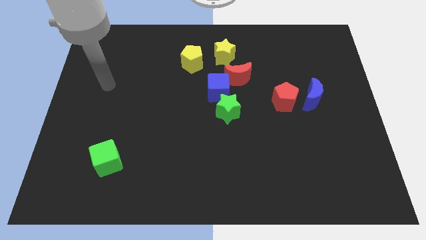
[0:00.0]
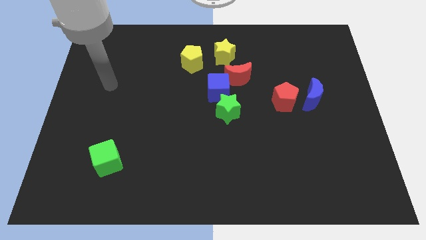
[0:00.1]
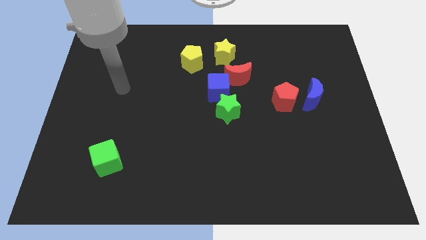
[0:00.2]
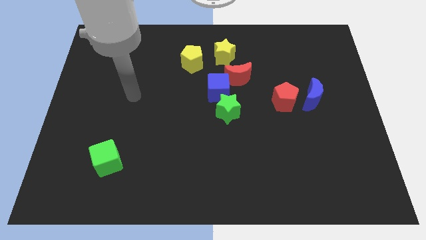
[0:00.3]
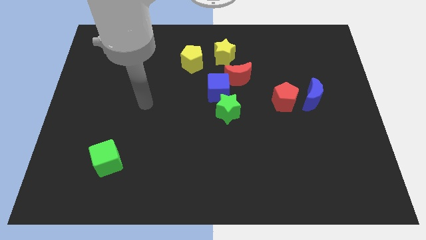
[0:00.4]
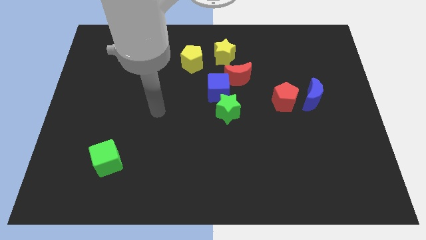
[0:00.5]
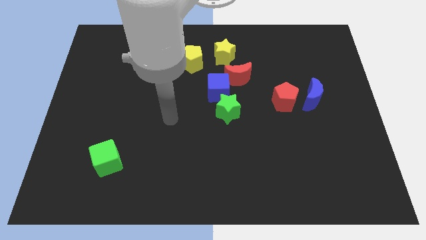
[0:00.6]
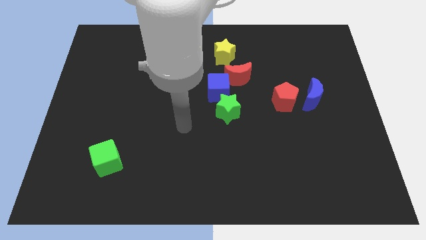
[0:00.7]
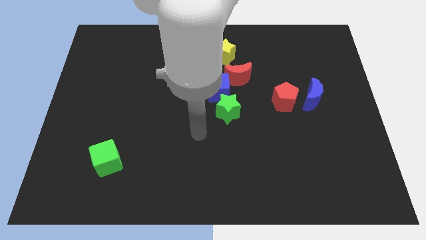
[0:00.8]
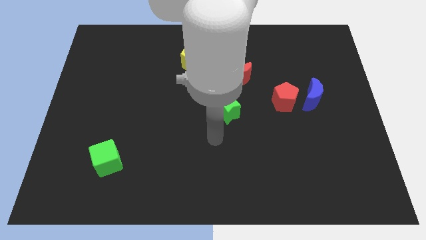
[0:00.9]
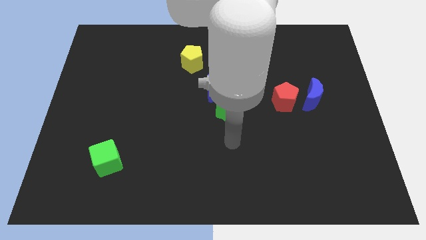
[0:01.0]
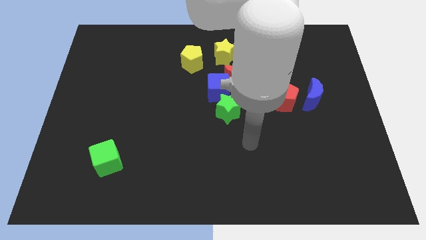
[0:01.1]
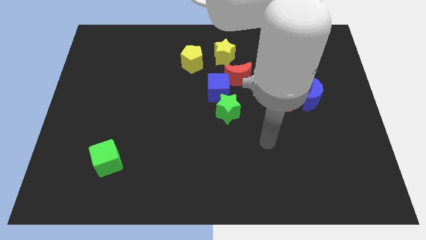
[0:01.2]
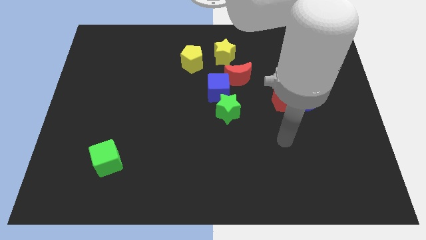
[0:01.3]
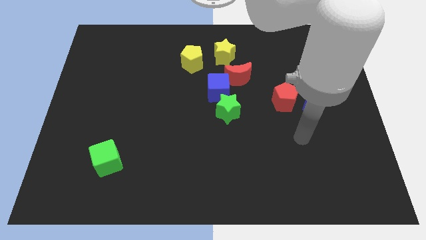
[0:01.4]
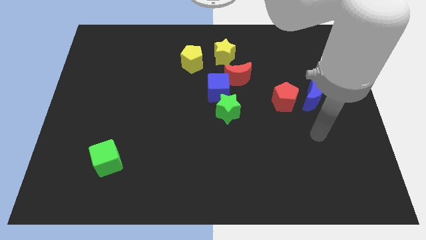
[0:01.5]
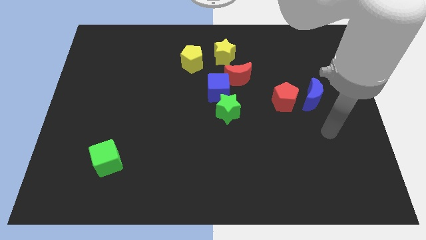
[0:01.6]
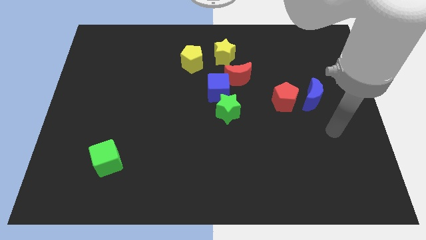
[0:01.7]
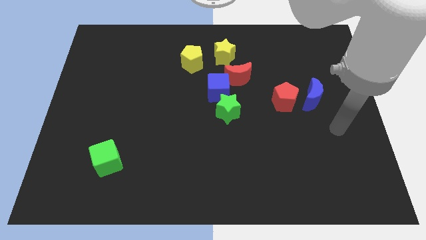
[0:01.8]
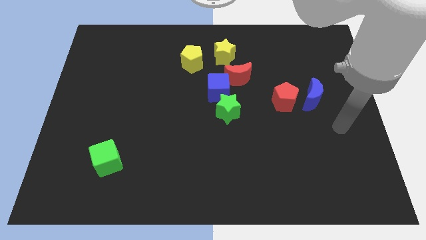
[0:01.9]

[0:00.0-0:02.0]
move your arm close to the blue moon

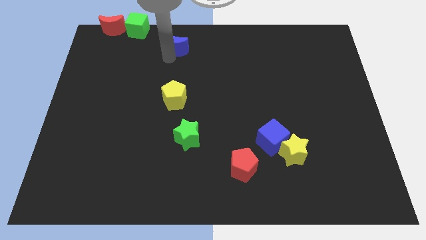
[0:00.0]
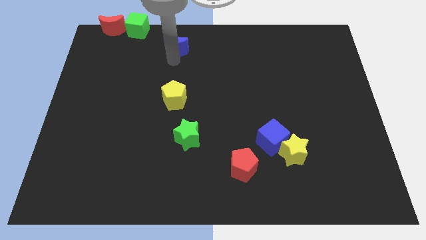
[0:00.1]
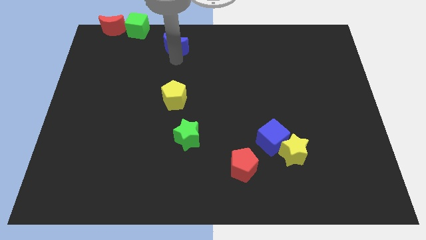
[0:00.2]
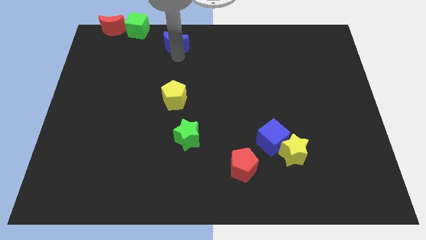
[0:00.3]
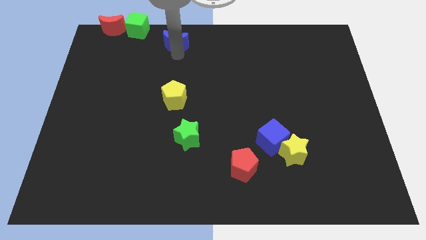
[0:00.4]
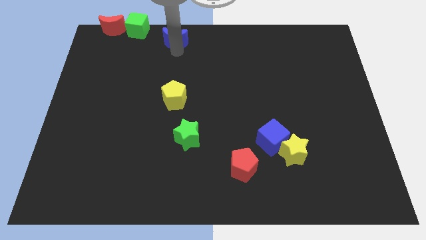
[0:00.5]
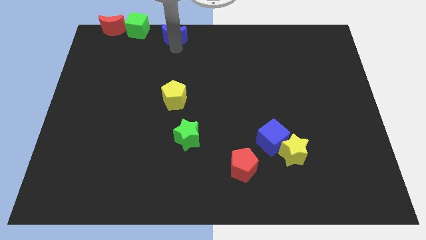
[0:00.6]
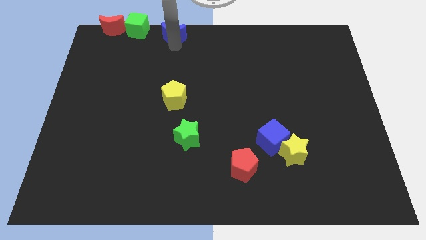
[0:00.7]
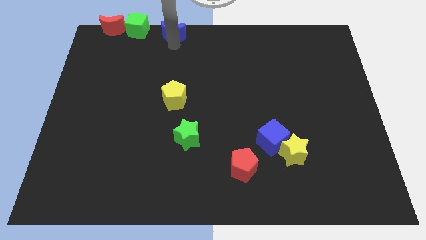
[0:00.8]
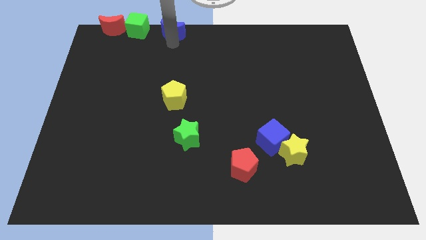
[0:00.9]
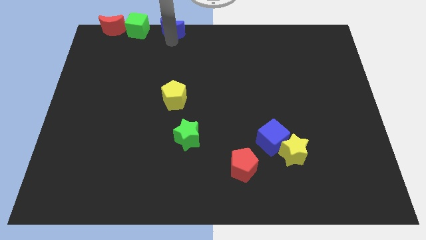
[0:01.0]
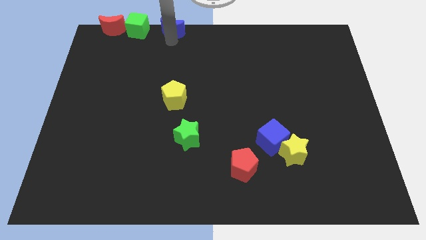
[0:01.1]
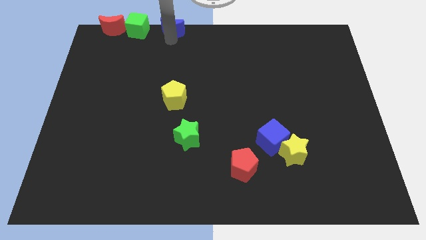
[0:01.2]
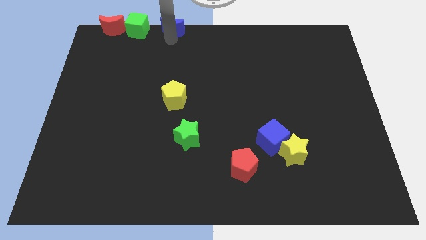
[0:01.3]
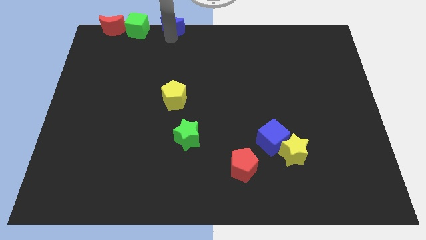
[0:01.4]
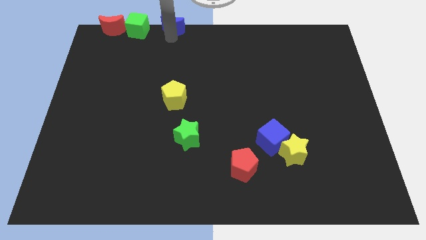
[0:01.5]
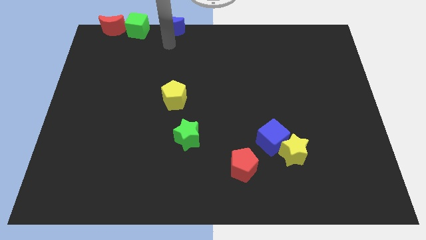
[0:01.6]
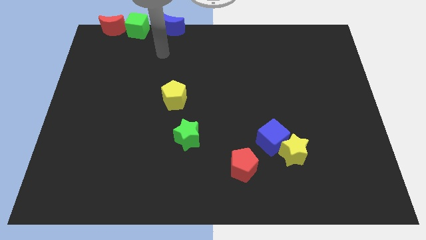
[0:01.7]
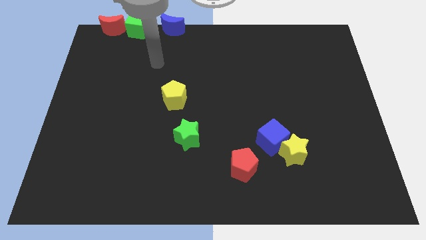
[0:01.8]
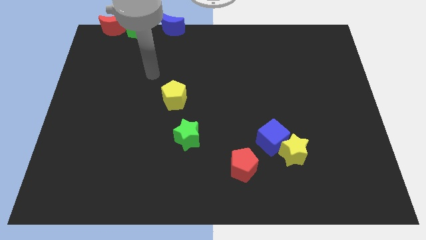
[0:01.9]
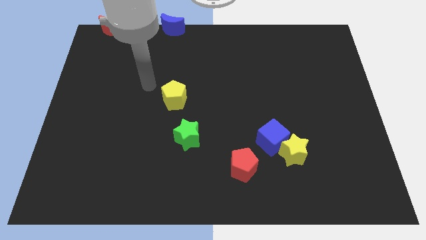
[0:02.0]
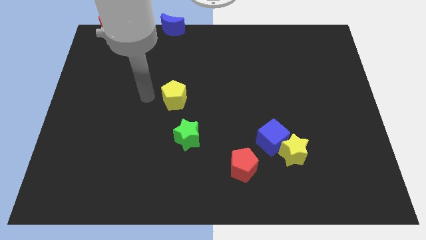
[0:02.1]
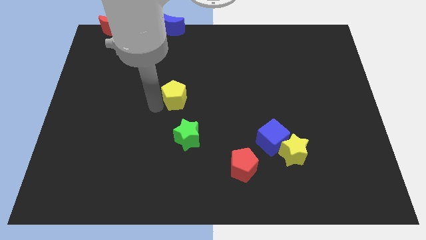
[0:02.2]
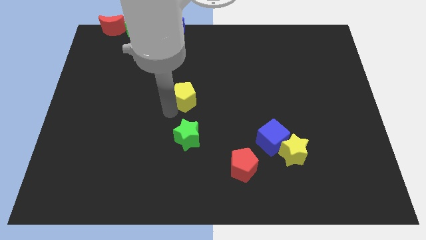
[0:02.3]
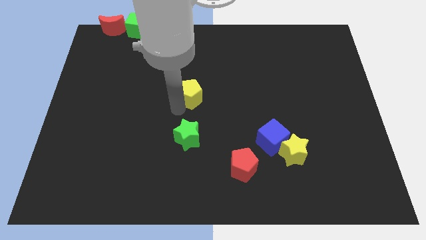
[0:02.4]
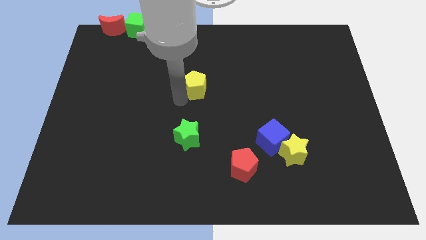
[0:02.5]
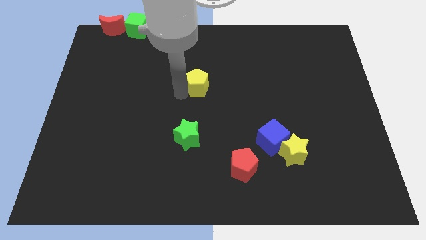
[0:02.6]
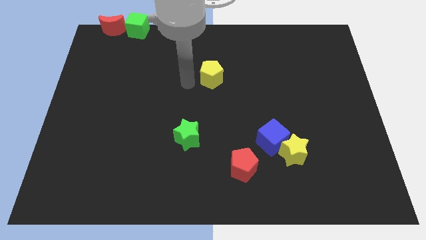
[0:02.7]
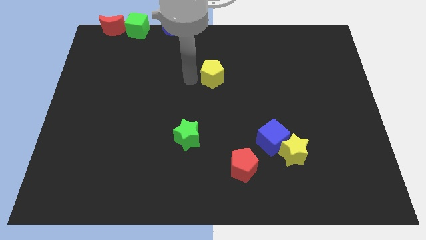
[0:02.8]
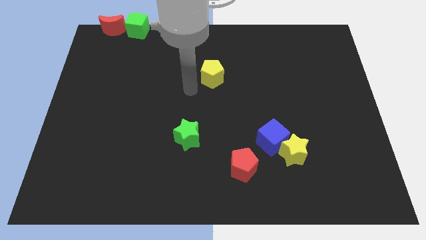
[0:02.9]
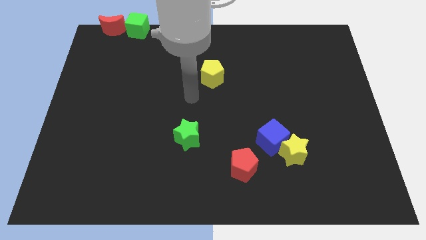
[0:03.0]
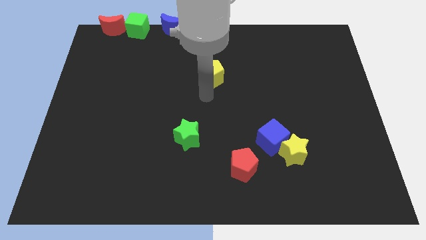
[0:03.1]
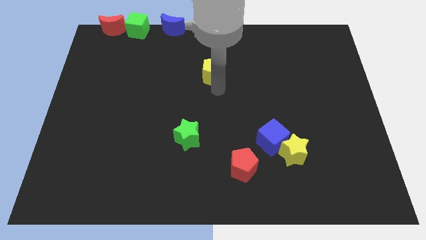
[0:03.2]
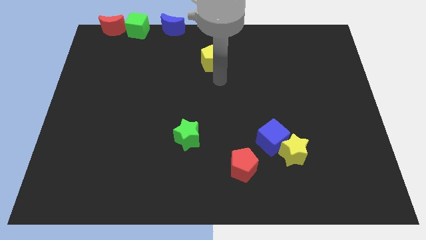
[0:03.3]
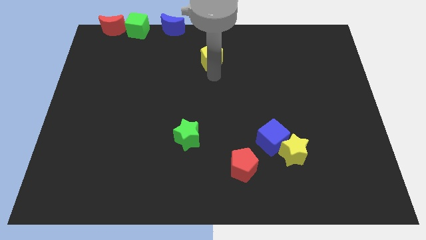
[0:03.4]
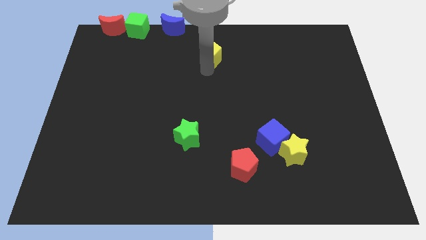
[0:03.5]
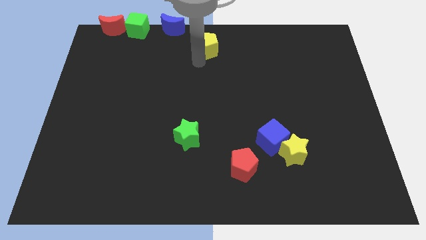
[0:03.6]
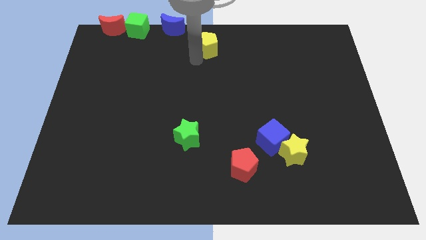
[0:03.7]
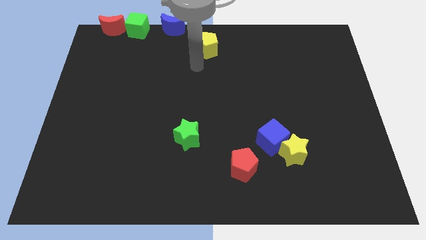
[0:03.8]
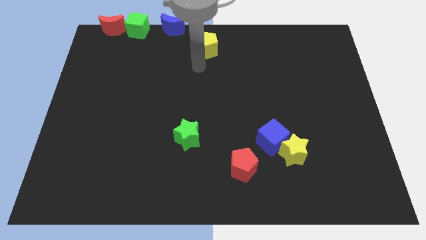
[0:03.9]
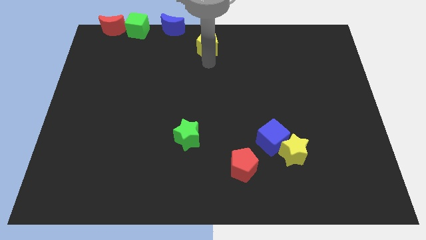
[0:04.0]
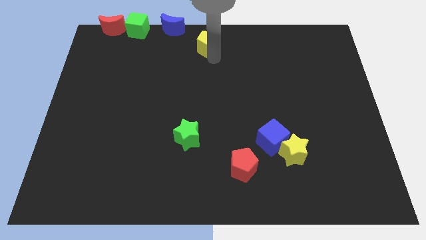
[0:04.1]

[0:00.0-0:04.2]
move the yellow pentagon to the top centre of the board

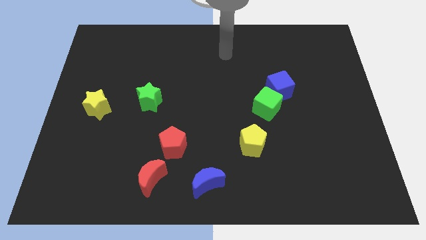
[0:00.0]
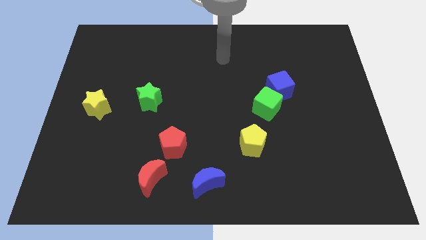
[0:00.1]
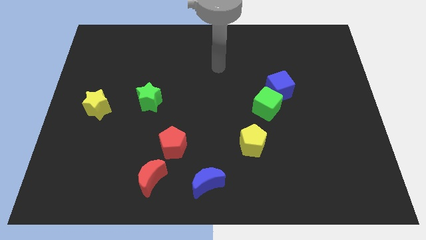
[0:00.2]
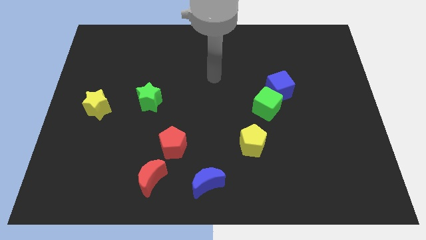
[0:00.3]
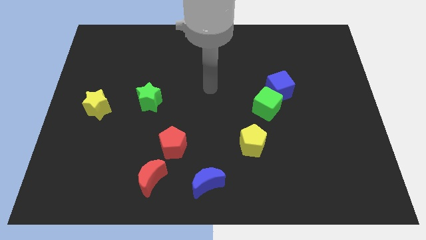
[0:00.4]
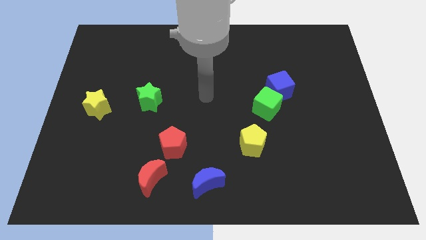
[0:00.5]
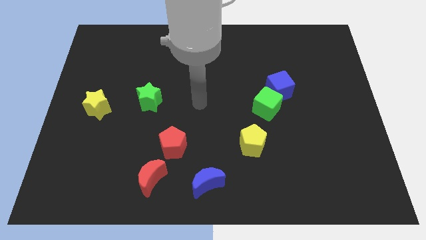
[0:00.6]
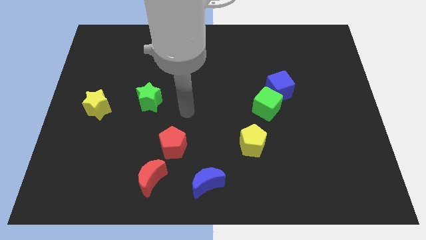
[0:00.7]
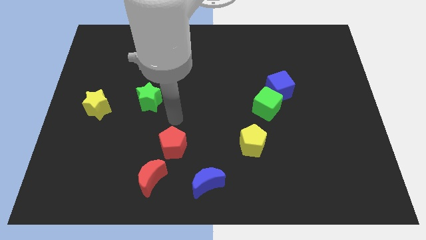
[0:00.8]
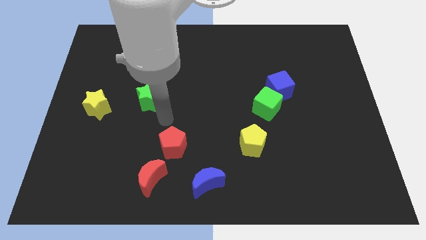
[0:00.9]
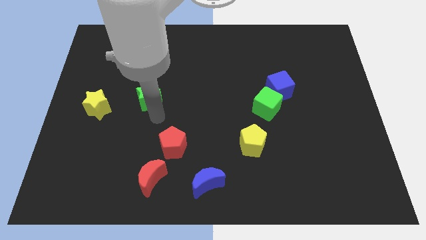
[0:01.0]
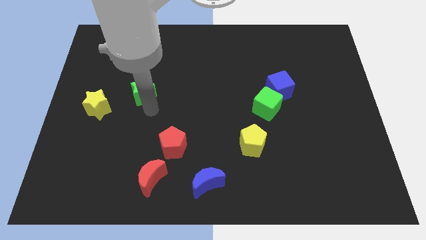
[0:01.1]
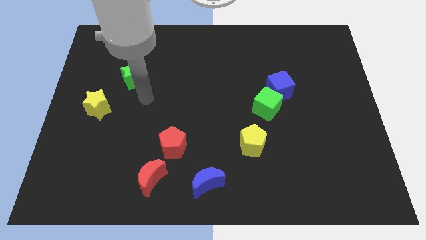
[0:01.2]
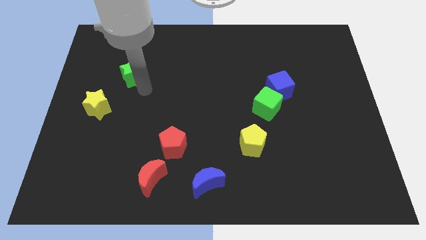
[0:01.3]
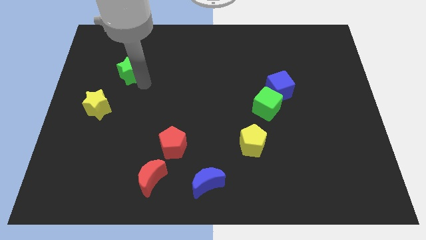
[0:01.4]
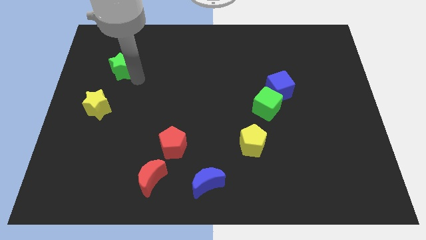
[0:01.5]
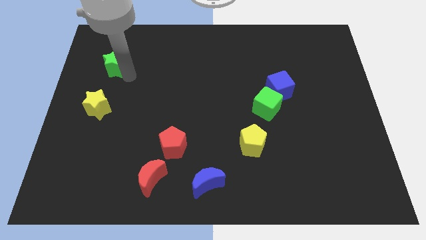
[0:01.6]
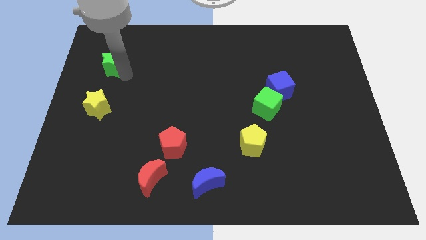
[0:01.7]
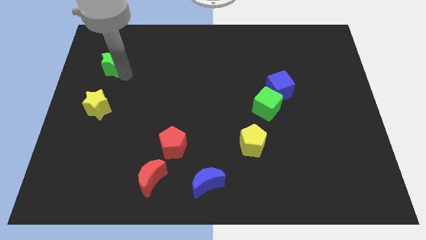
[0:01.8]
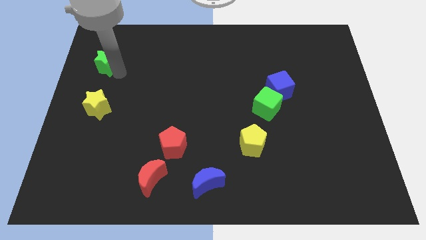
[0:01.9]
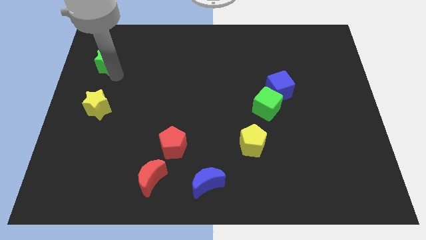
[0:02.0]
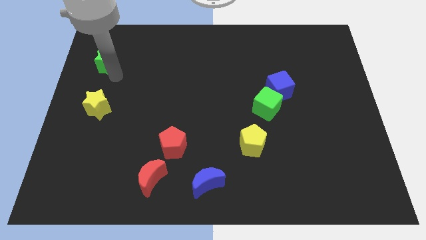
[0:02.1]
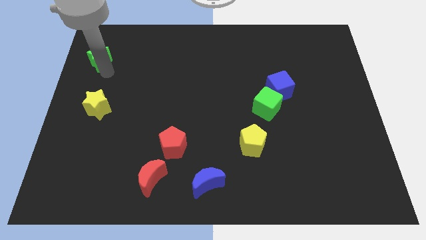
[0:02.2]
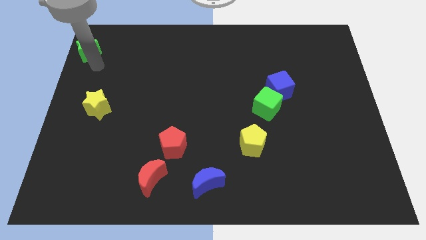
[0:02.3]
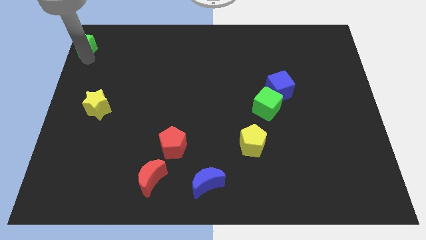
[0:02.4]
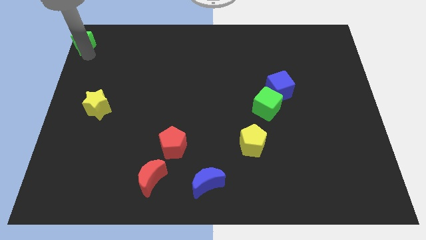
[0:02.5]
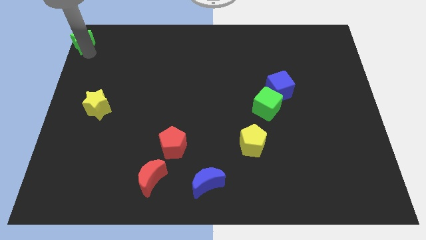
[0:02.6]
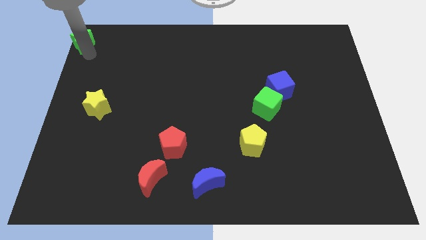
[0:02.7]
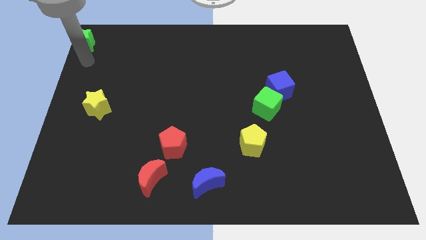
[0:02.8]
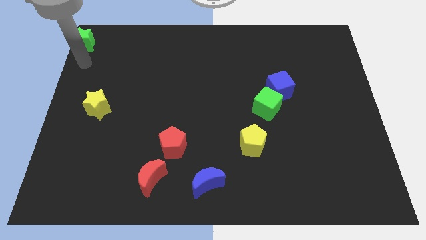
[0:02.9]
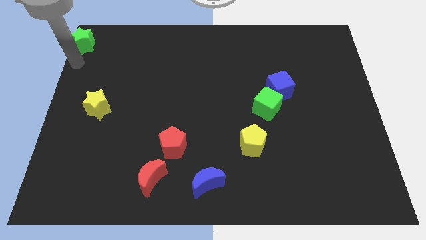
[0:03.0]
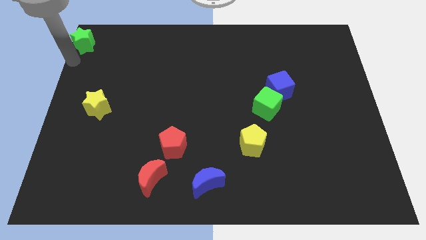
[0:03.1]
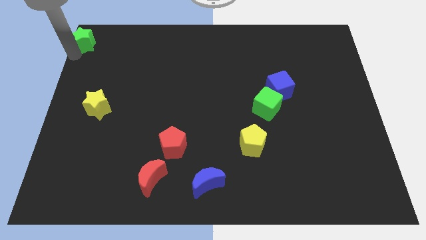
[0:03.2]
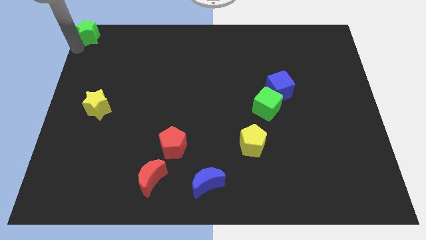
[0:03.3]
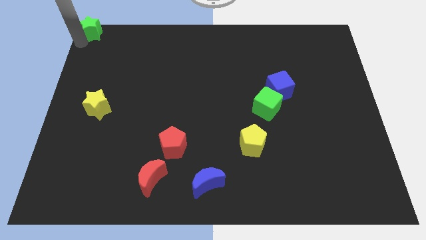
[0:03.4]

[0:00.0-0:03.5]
push the green star towards the top left corner of the board
